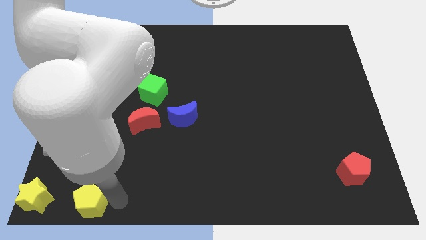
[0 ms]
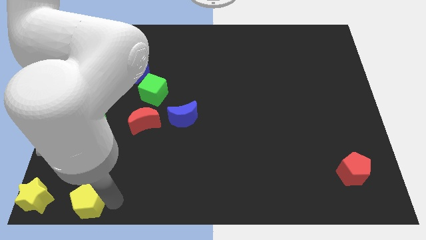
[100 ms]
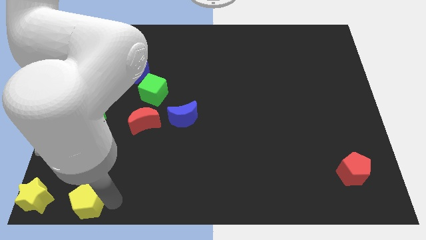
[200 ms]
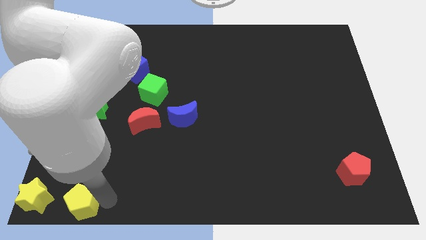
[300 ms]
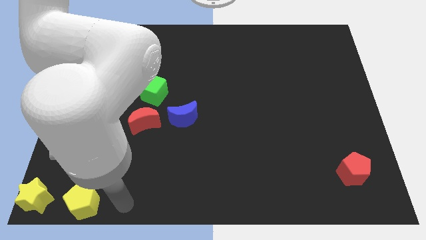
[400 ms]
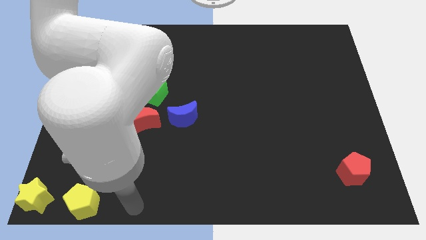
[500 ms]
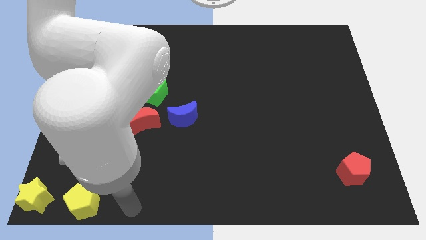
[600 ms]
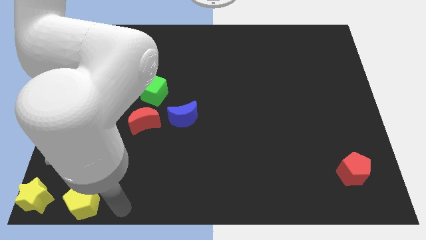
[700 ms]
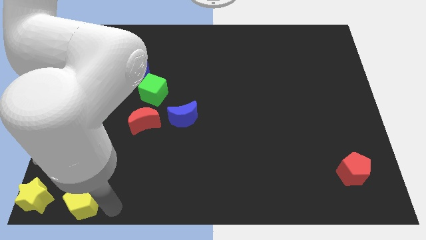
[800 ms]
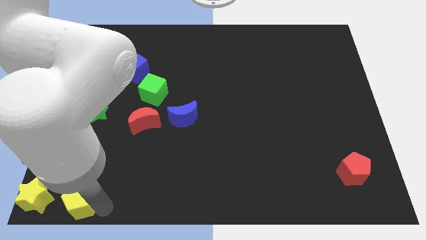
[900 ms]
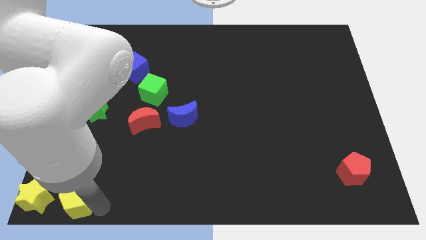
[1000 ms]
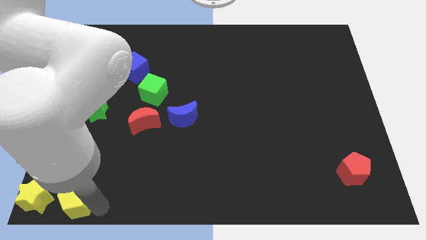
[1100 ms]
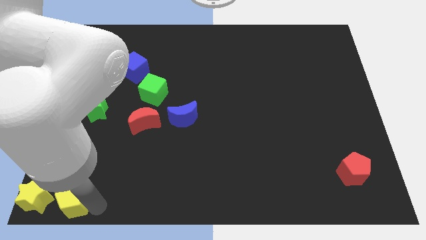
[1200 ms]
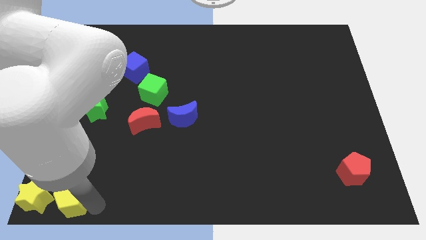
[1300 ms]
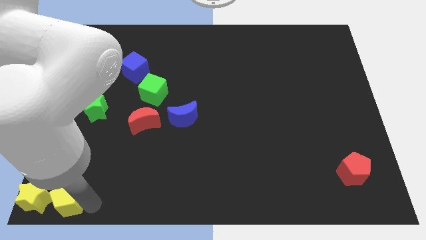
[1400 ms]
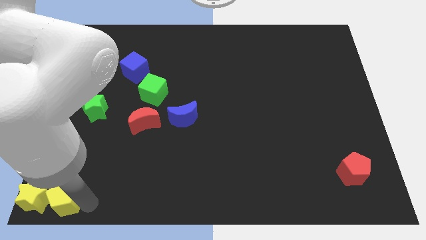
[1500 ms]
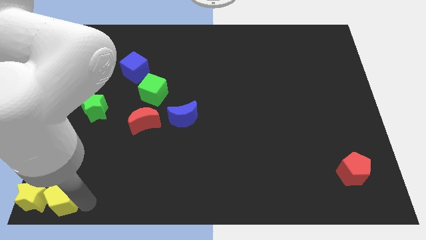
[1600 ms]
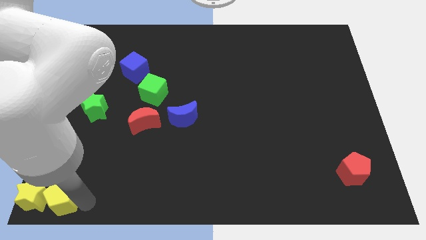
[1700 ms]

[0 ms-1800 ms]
put the yellow pentagon at the right side of the yellow star

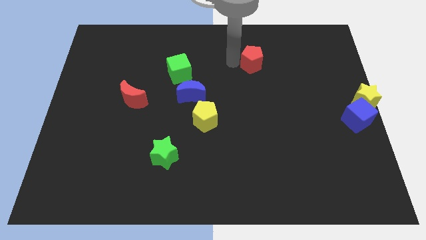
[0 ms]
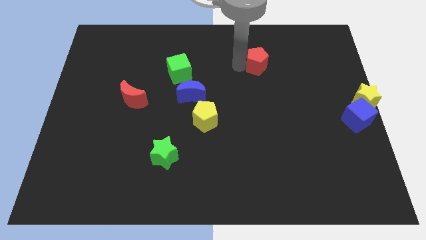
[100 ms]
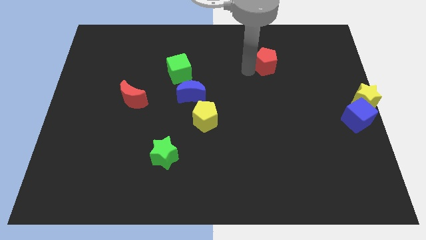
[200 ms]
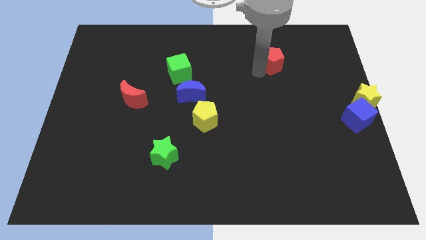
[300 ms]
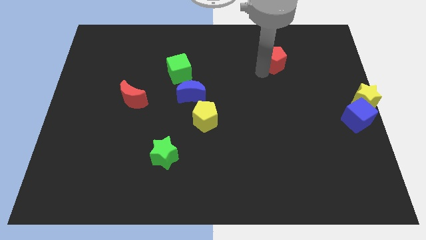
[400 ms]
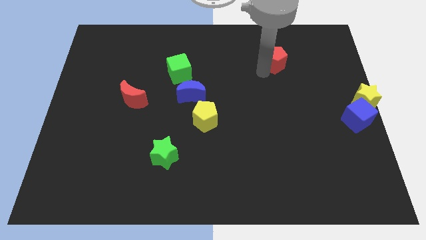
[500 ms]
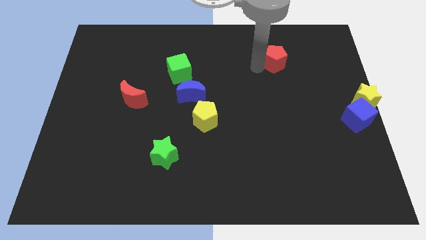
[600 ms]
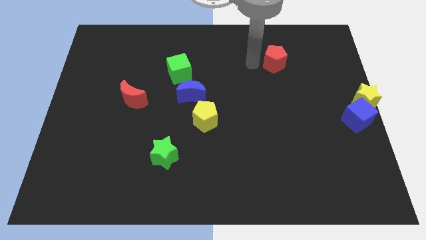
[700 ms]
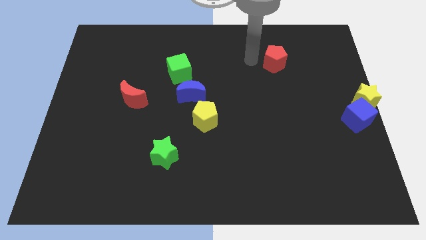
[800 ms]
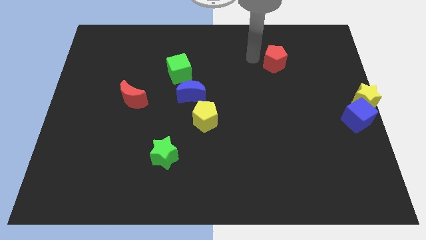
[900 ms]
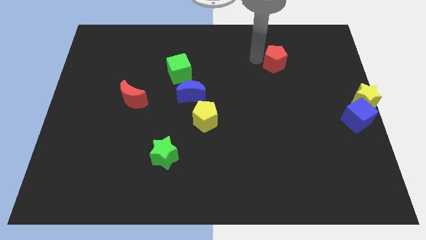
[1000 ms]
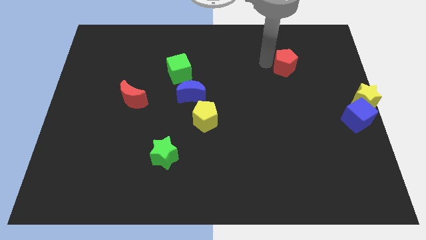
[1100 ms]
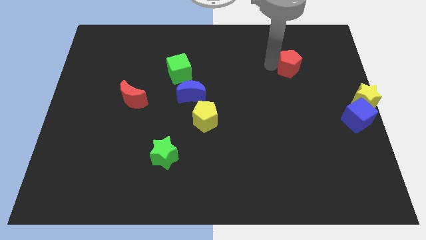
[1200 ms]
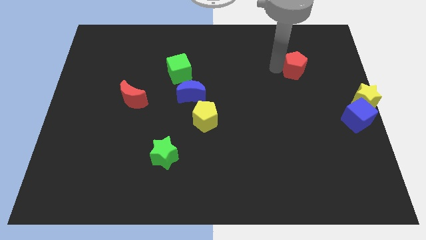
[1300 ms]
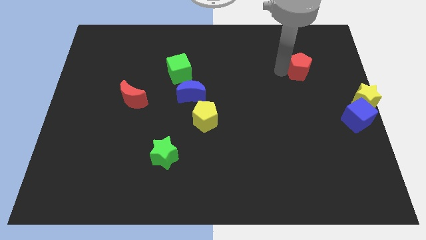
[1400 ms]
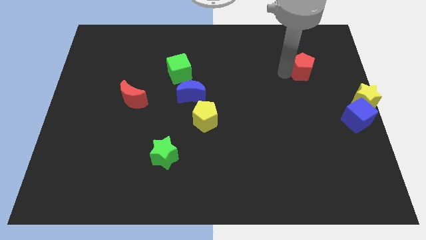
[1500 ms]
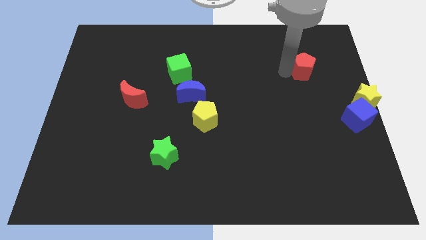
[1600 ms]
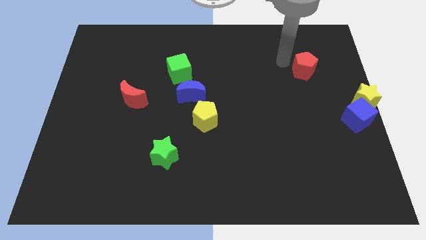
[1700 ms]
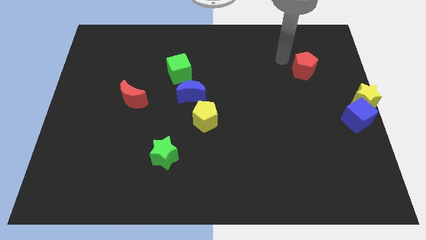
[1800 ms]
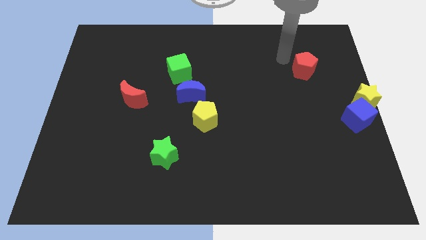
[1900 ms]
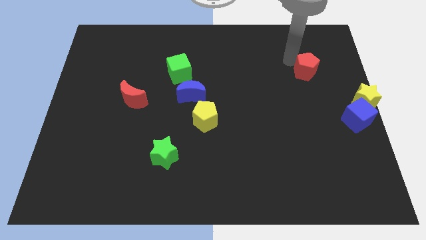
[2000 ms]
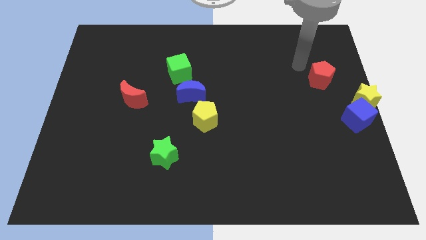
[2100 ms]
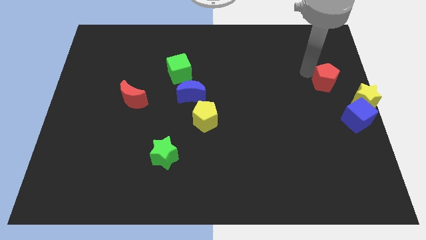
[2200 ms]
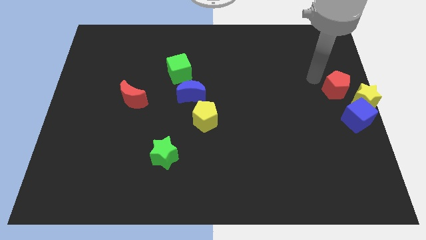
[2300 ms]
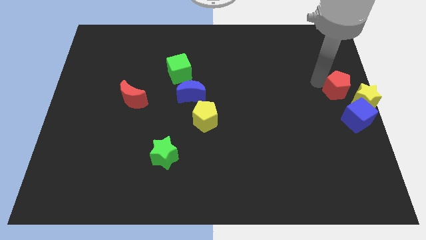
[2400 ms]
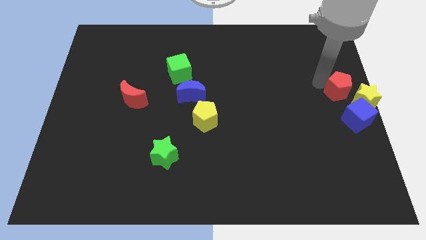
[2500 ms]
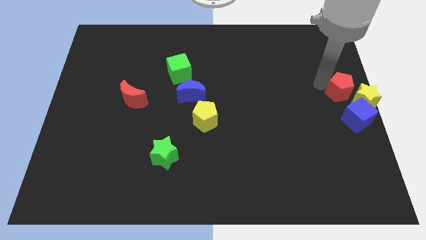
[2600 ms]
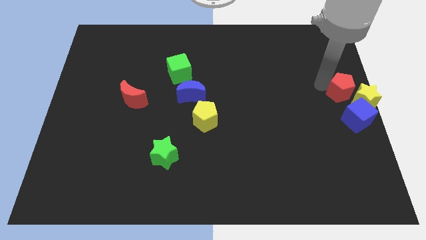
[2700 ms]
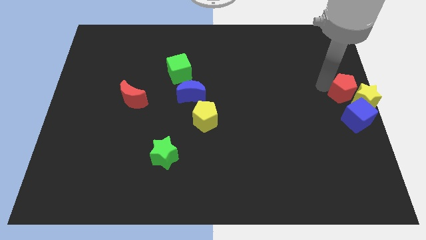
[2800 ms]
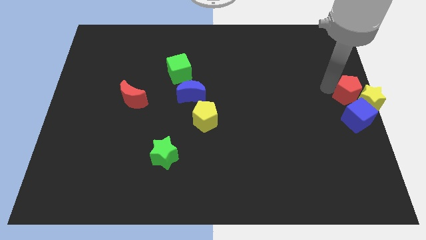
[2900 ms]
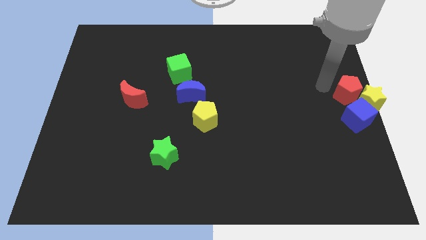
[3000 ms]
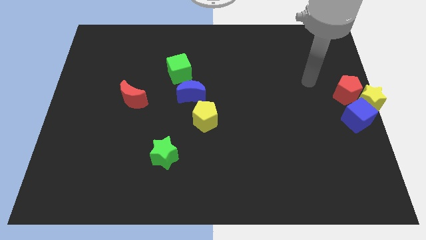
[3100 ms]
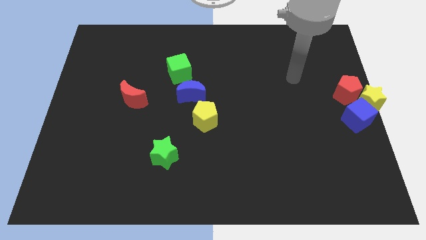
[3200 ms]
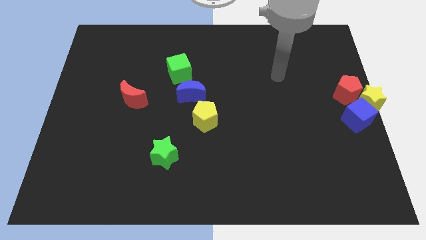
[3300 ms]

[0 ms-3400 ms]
move the red pentagon towards the yellow star

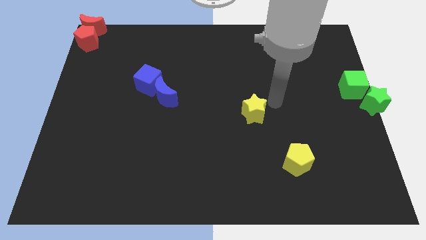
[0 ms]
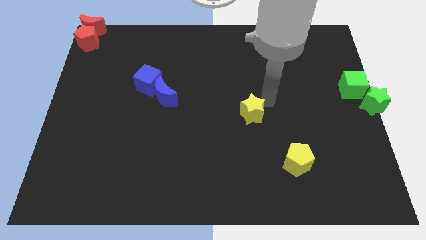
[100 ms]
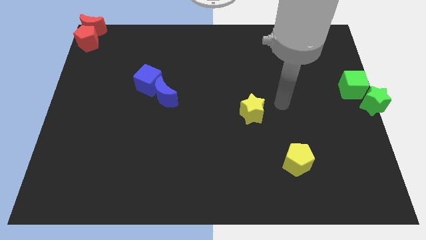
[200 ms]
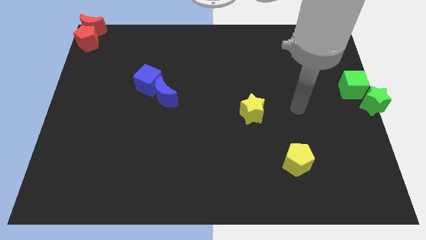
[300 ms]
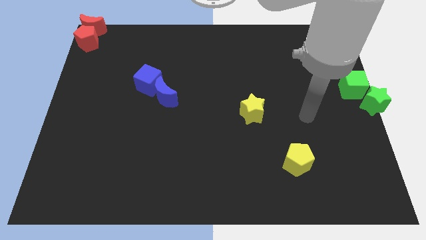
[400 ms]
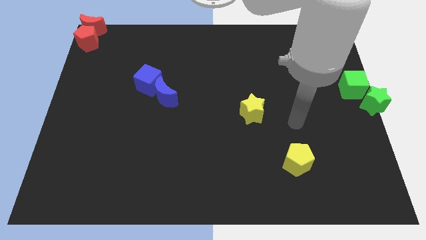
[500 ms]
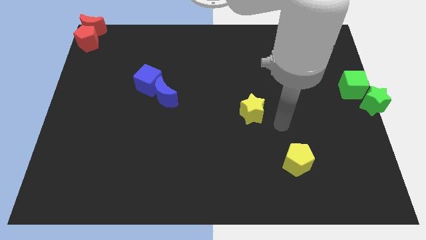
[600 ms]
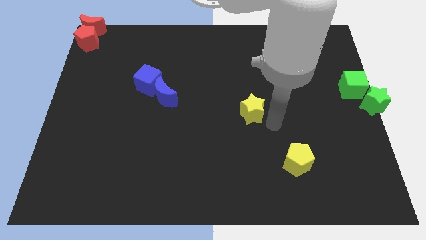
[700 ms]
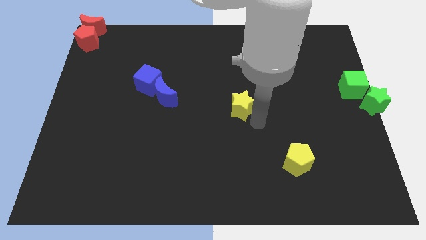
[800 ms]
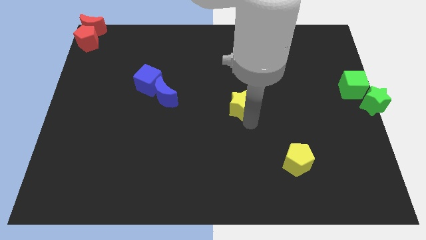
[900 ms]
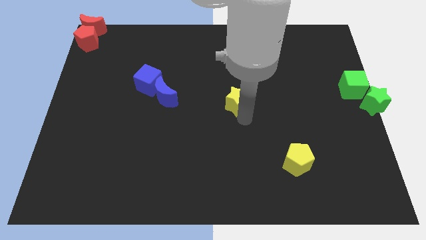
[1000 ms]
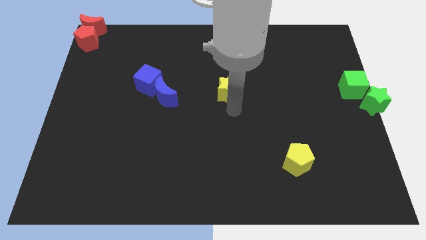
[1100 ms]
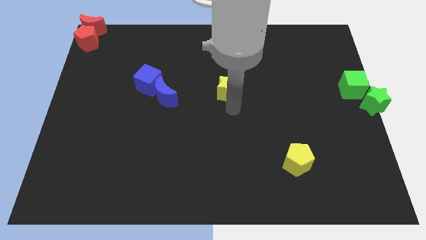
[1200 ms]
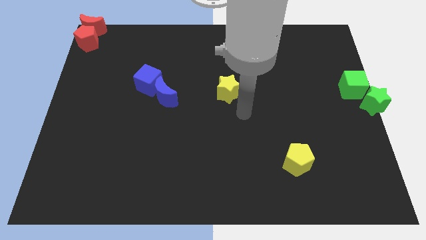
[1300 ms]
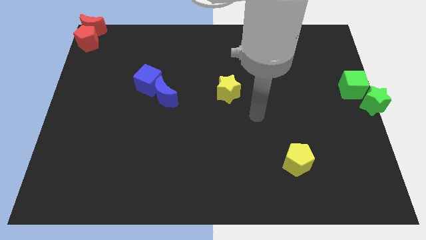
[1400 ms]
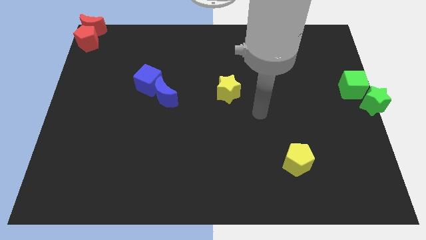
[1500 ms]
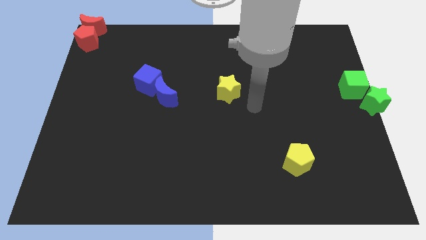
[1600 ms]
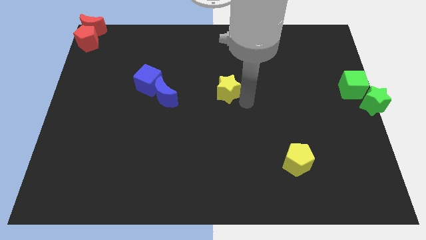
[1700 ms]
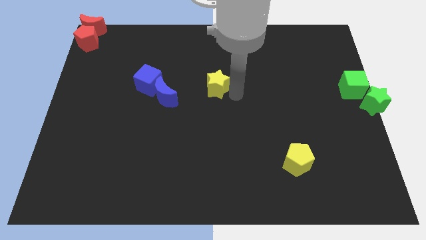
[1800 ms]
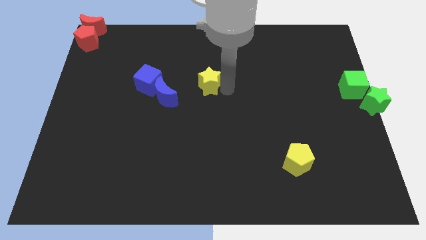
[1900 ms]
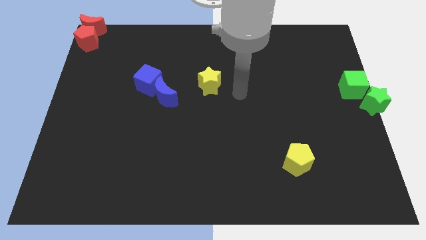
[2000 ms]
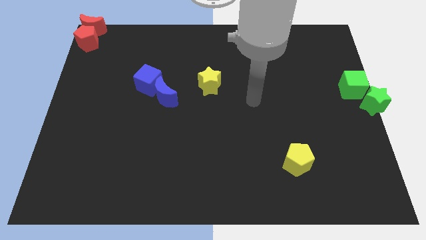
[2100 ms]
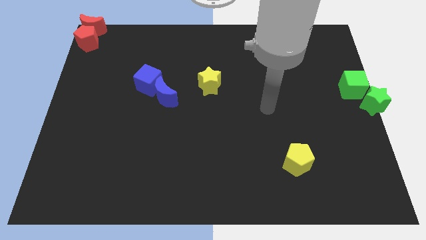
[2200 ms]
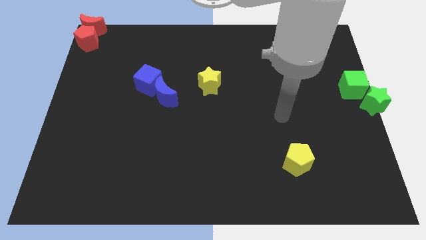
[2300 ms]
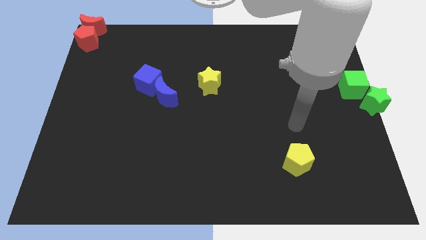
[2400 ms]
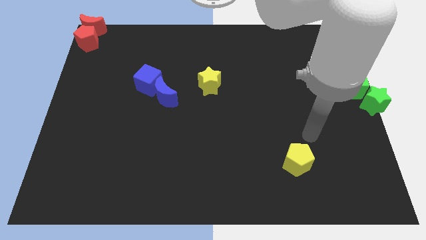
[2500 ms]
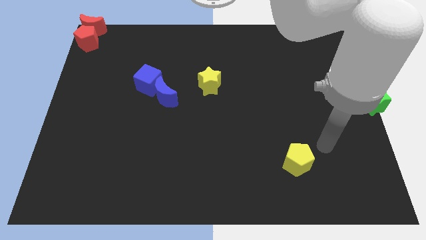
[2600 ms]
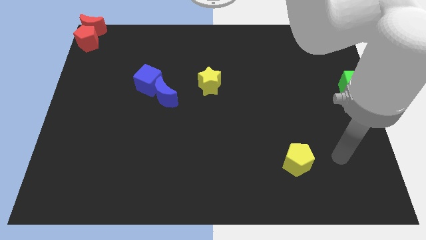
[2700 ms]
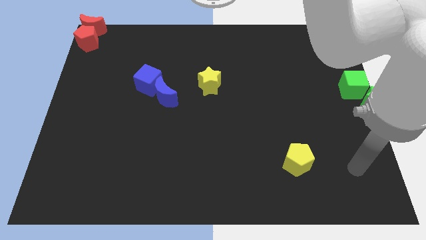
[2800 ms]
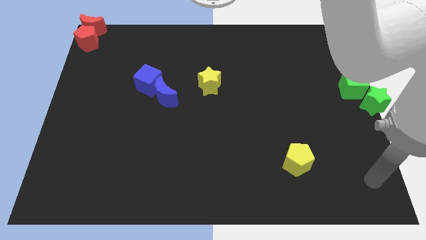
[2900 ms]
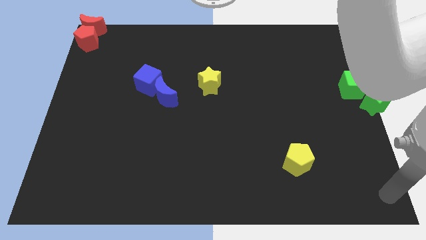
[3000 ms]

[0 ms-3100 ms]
push the yellow star right to the blue crescent

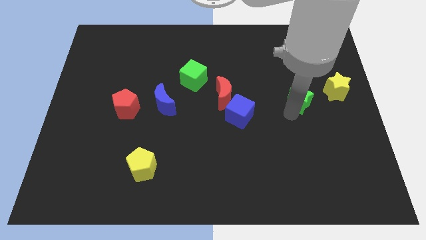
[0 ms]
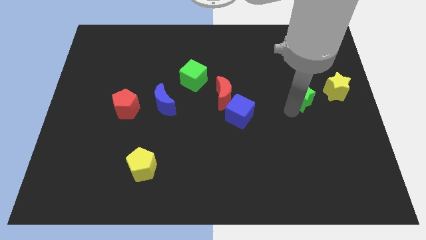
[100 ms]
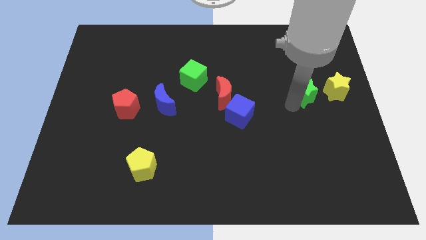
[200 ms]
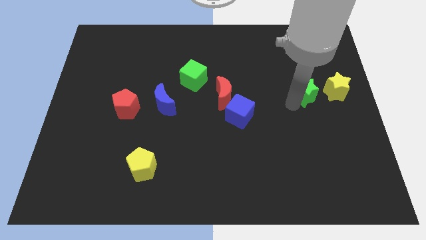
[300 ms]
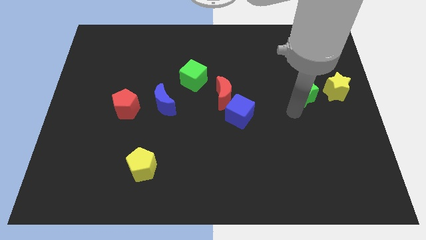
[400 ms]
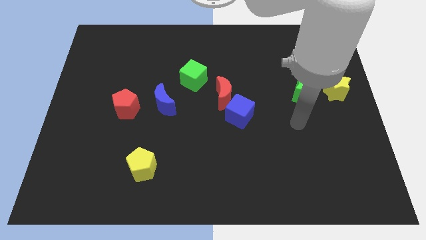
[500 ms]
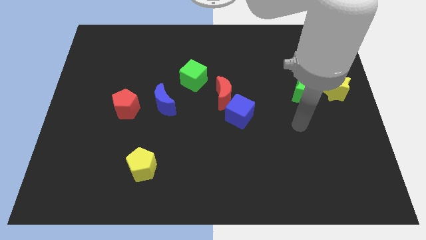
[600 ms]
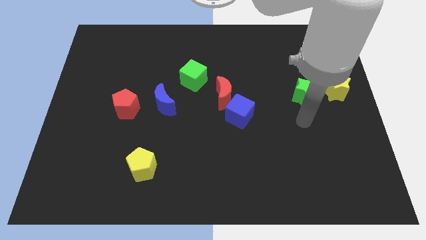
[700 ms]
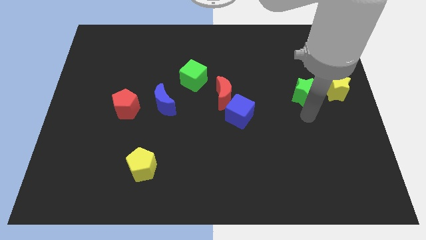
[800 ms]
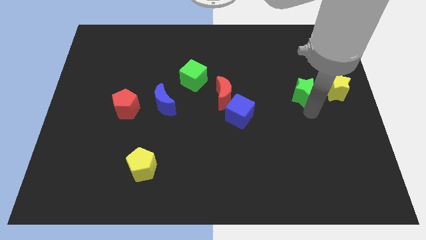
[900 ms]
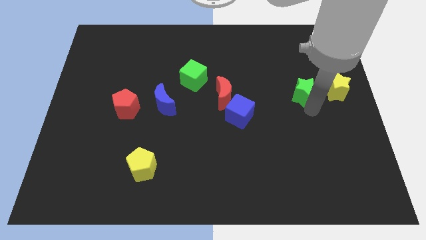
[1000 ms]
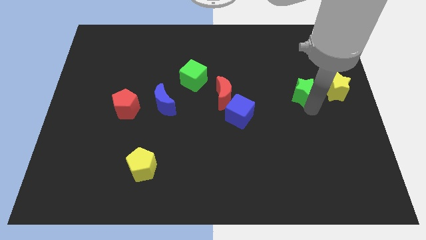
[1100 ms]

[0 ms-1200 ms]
move green star left beside the yellow star
